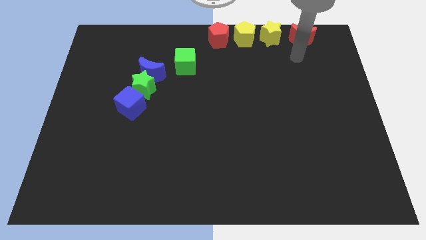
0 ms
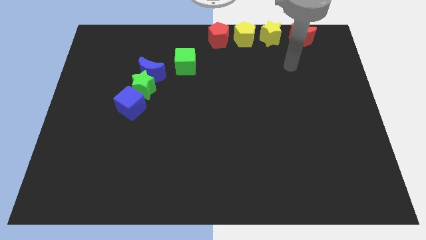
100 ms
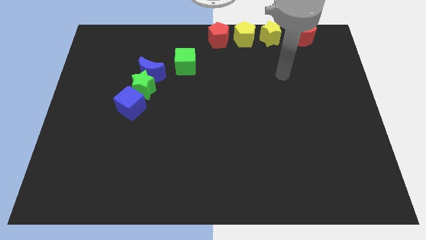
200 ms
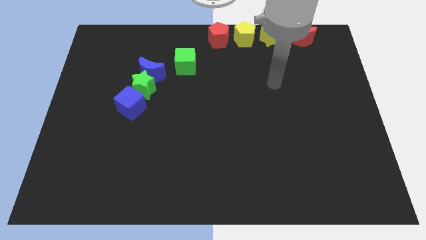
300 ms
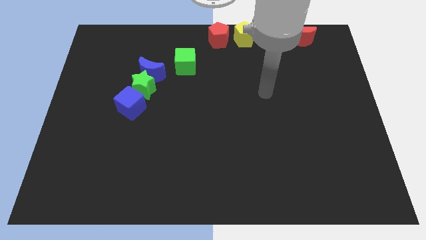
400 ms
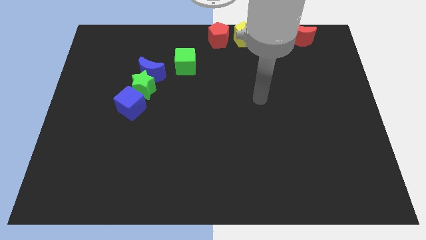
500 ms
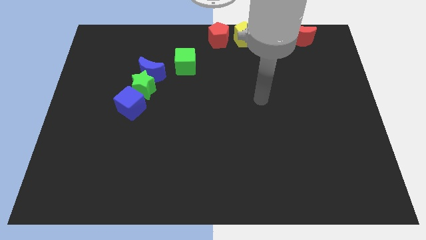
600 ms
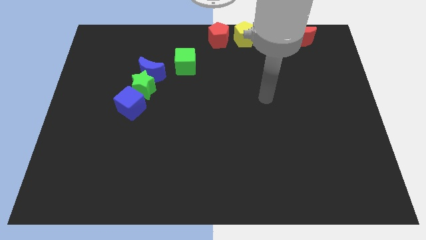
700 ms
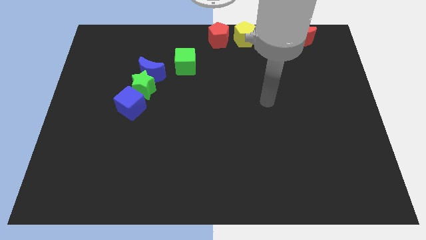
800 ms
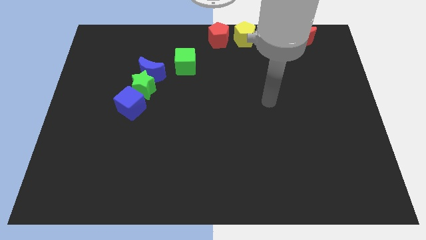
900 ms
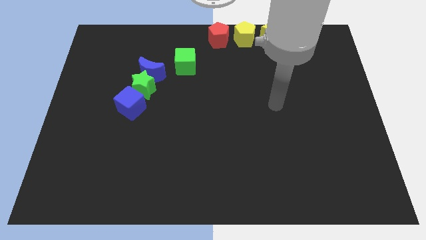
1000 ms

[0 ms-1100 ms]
move your hand away from the red crescent

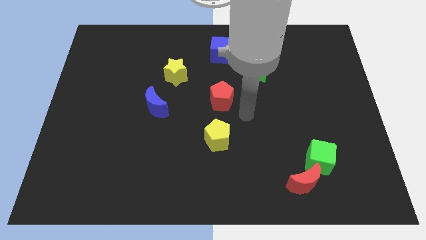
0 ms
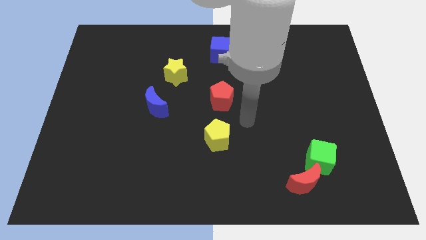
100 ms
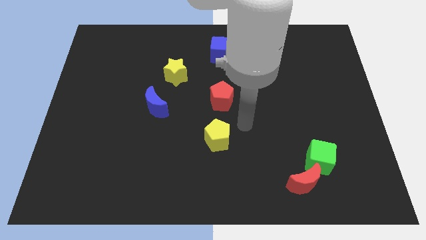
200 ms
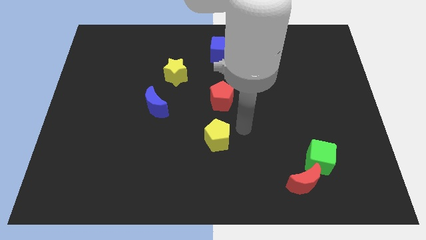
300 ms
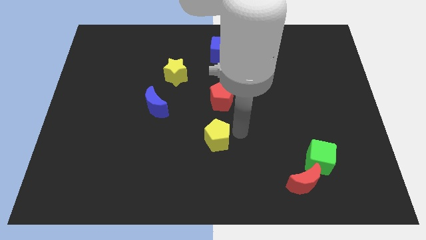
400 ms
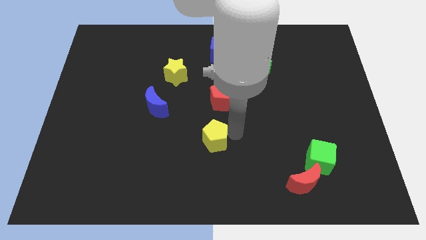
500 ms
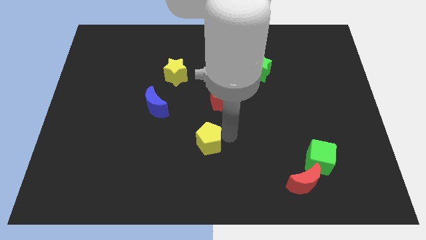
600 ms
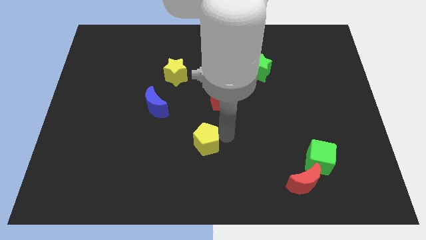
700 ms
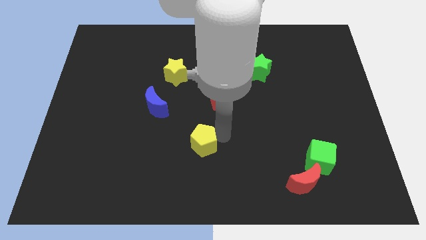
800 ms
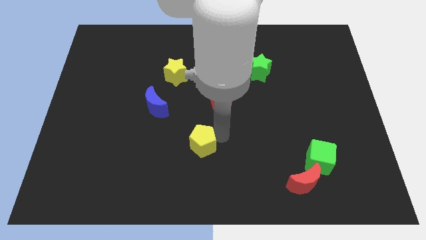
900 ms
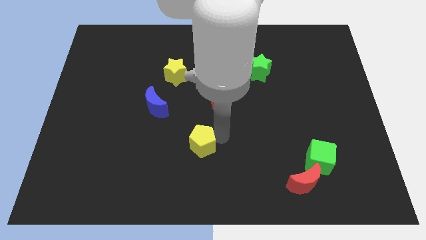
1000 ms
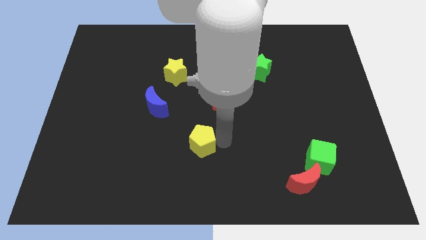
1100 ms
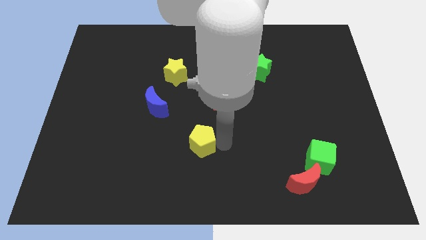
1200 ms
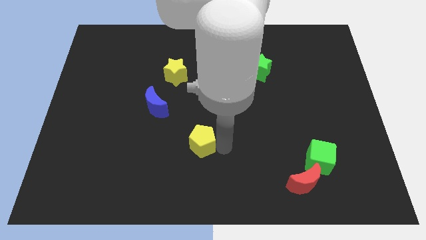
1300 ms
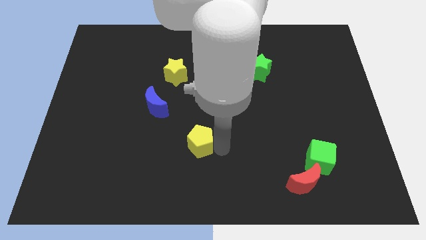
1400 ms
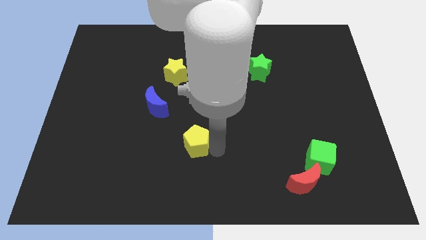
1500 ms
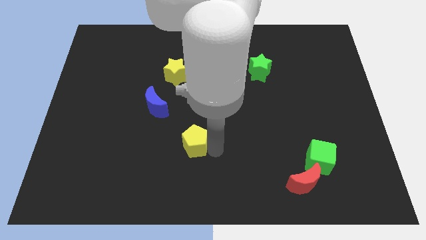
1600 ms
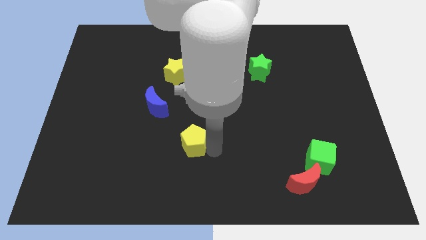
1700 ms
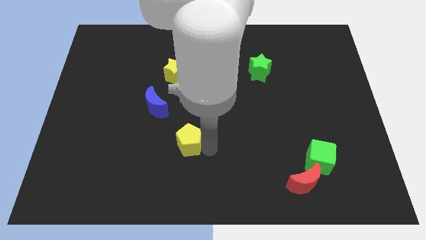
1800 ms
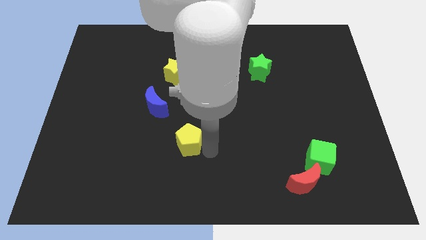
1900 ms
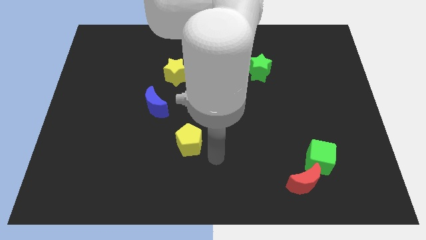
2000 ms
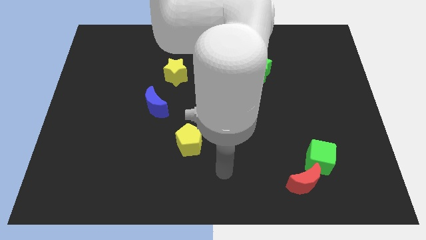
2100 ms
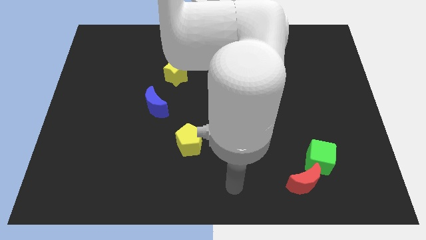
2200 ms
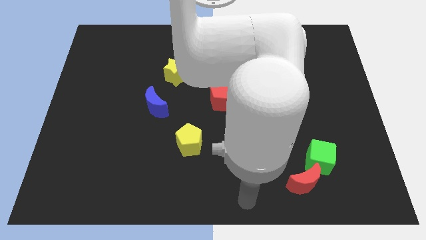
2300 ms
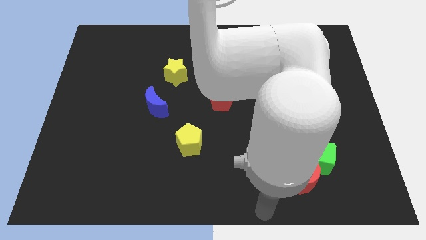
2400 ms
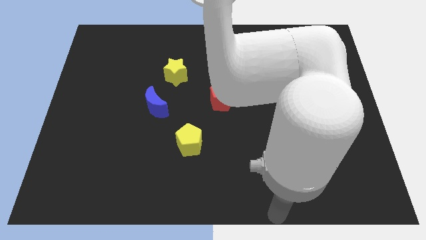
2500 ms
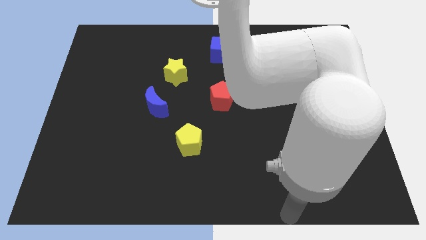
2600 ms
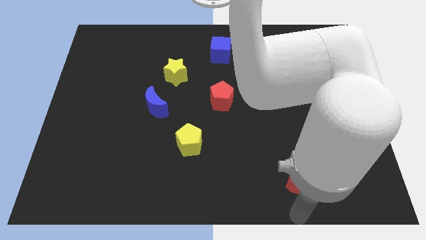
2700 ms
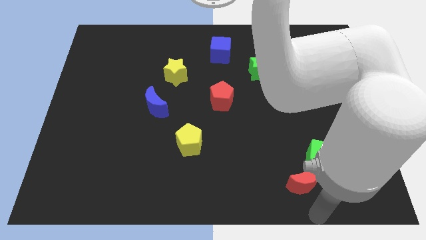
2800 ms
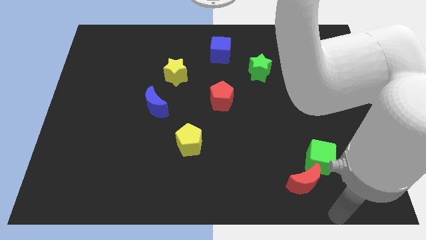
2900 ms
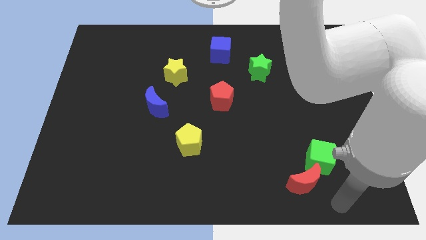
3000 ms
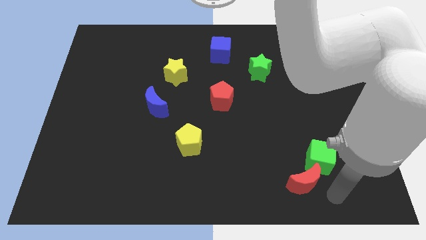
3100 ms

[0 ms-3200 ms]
slightly move the yellow pentagon slightly to the left of the board

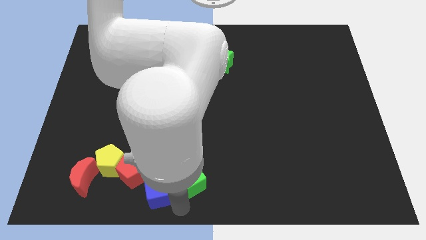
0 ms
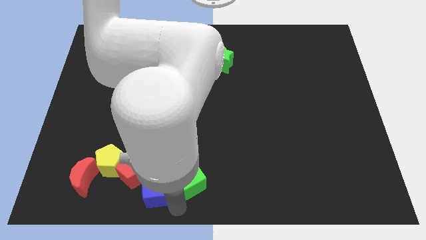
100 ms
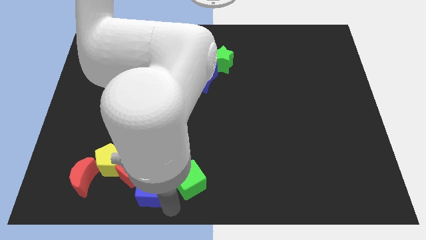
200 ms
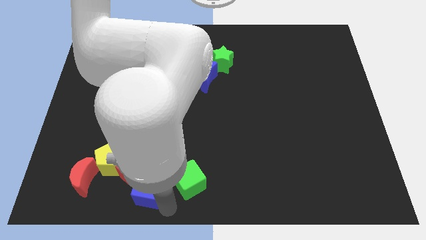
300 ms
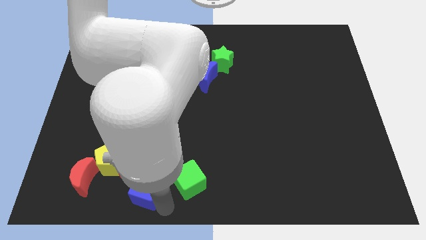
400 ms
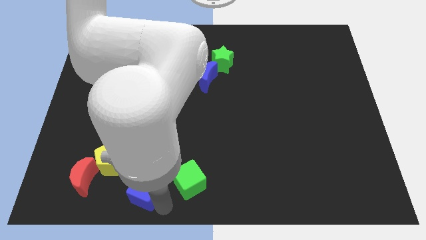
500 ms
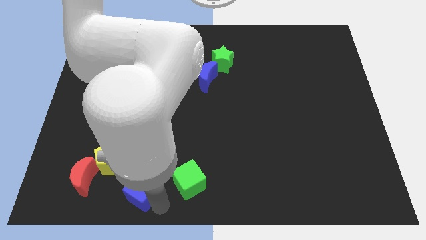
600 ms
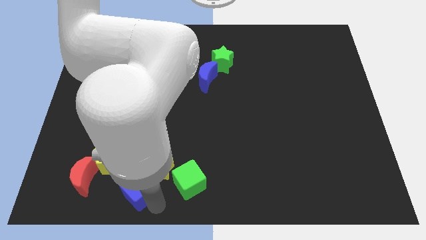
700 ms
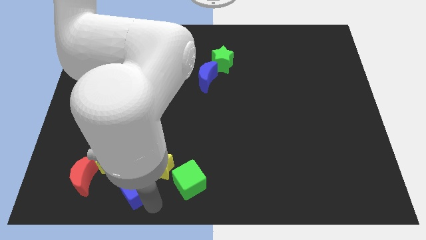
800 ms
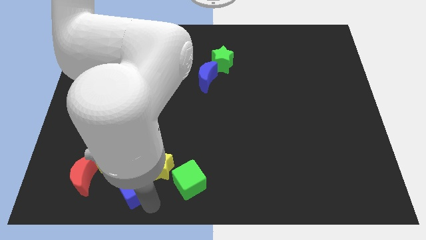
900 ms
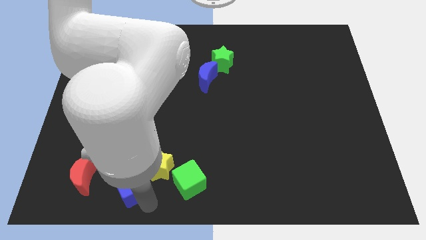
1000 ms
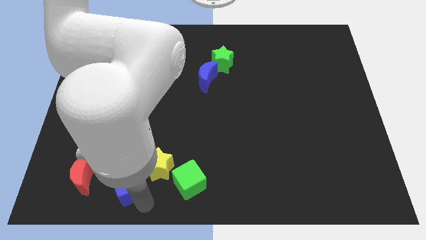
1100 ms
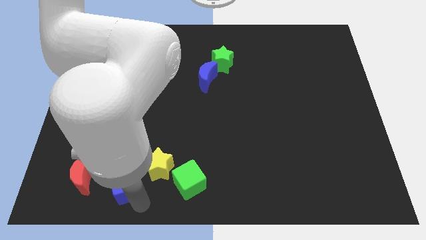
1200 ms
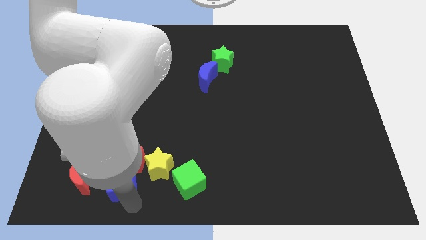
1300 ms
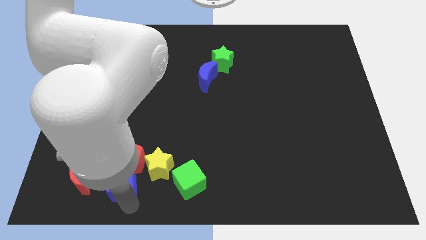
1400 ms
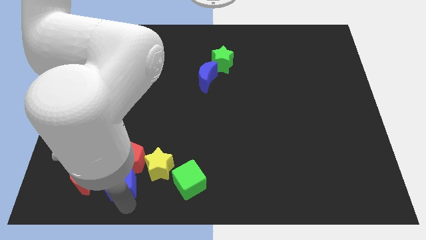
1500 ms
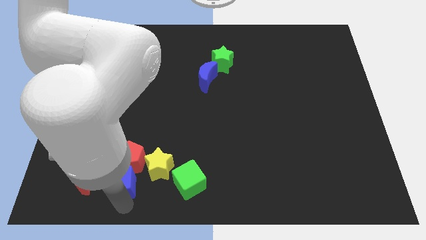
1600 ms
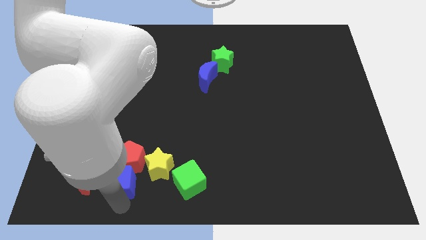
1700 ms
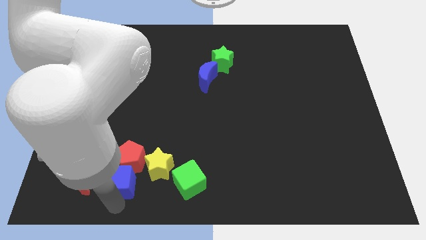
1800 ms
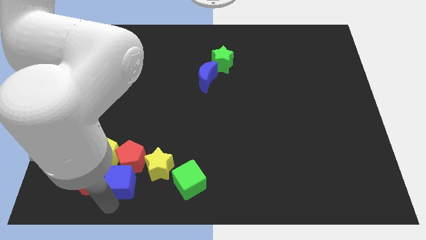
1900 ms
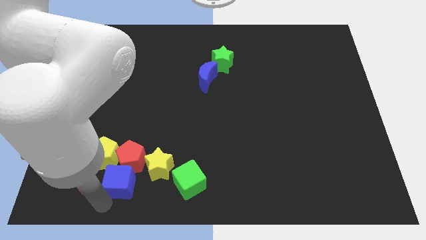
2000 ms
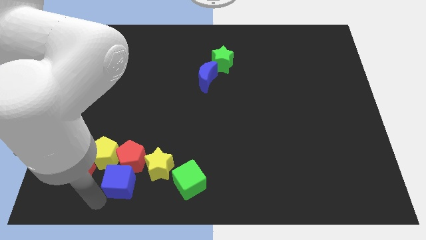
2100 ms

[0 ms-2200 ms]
push blue cube into red pentagon

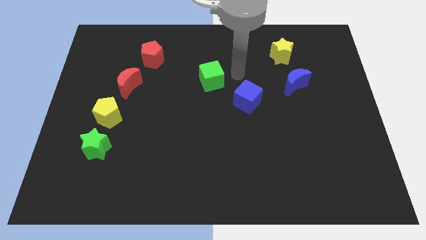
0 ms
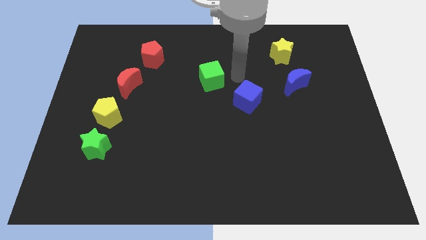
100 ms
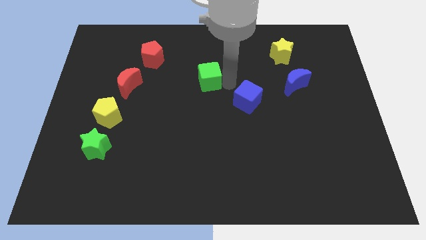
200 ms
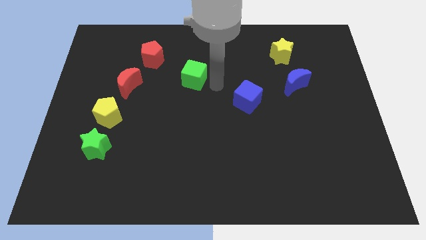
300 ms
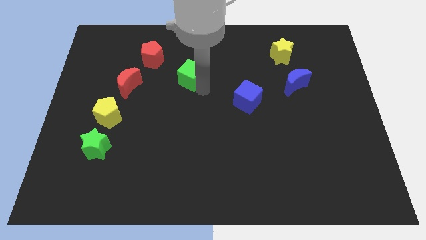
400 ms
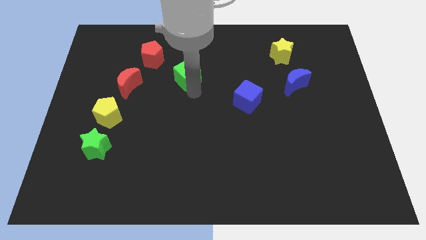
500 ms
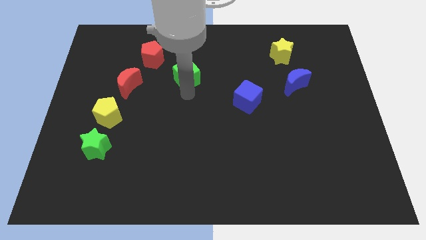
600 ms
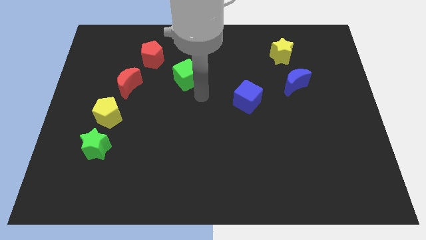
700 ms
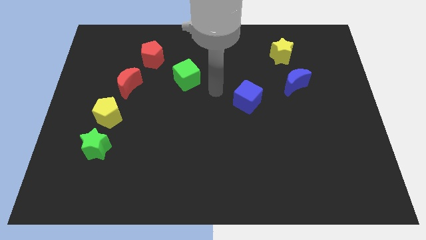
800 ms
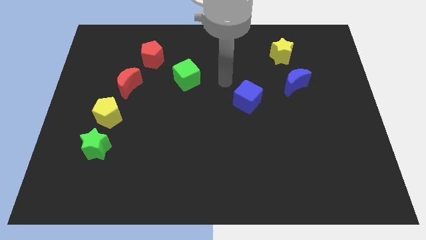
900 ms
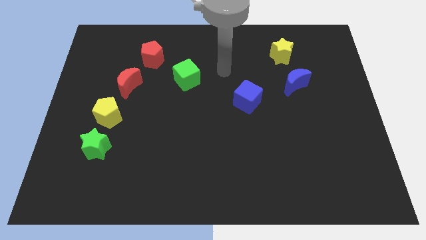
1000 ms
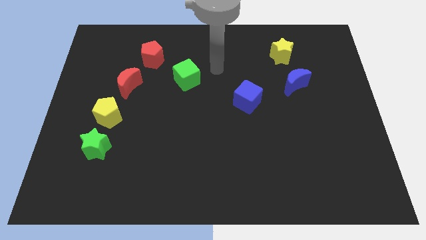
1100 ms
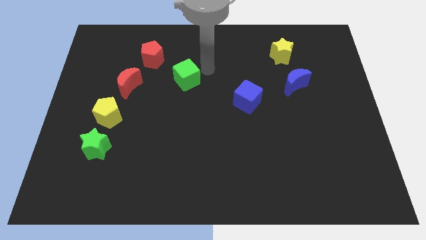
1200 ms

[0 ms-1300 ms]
move the green cube to the bottom right of red pentagon

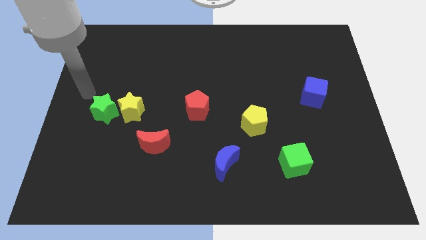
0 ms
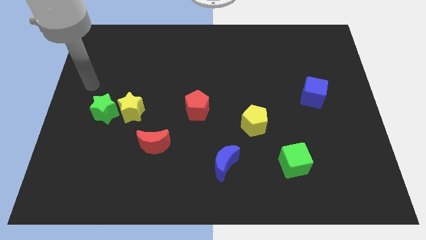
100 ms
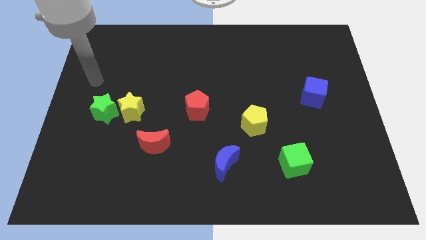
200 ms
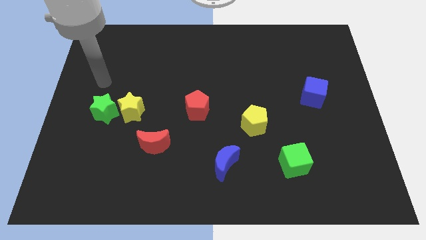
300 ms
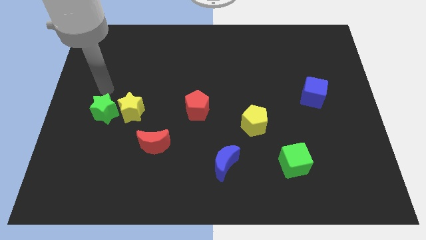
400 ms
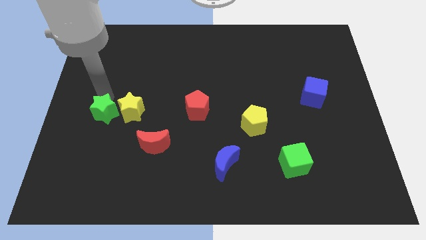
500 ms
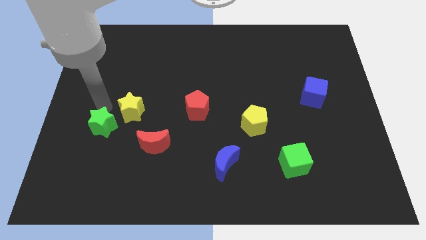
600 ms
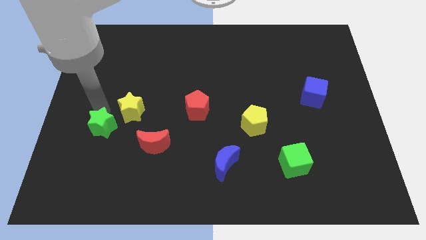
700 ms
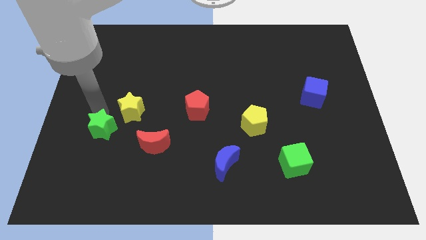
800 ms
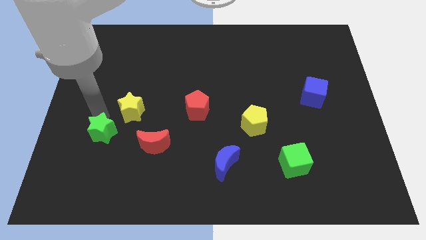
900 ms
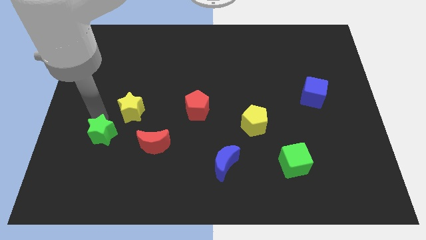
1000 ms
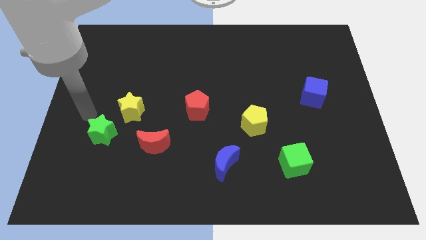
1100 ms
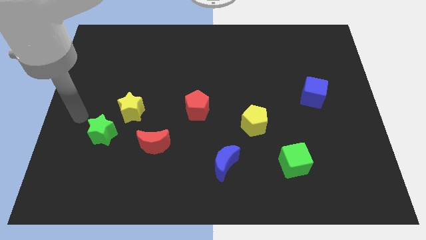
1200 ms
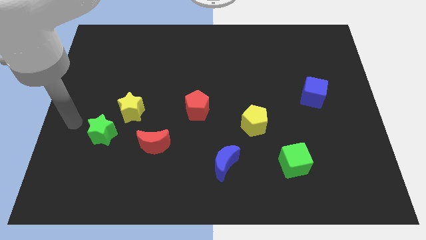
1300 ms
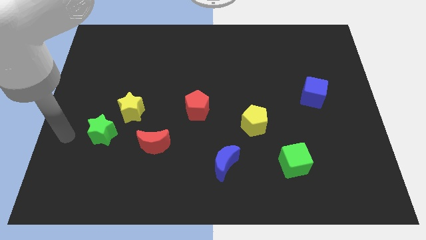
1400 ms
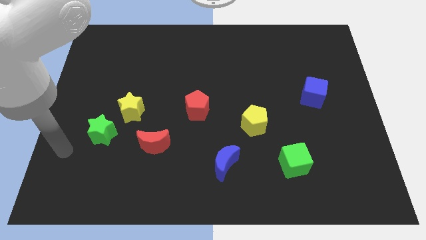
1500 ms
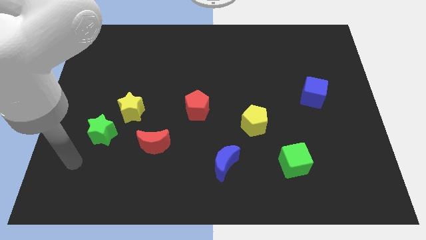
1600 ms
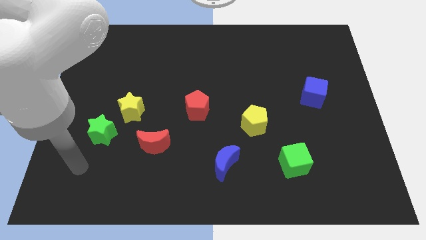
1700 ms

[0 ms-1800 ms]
separate the green star from the yellow star
